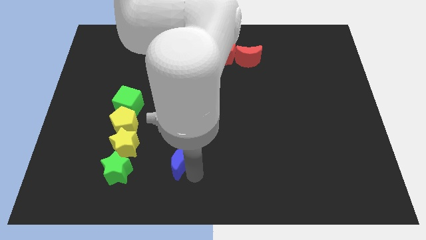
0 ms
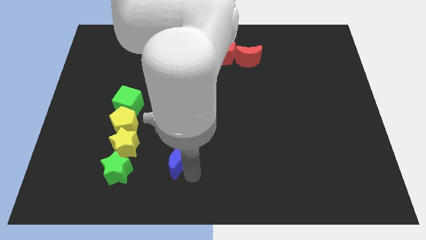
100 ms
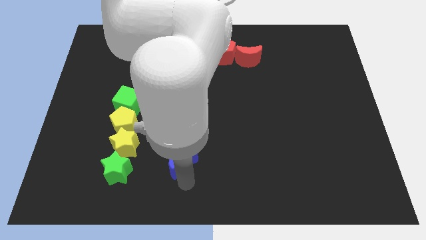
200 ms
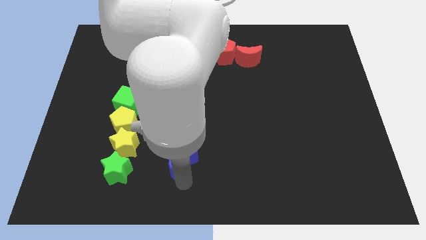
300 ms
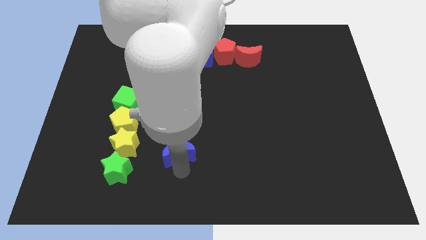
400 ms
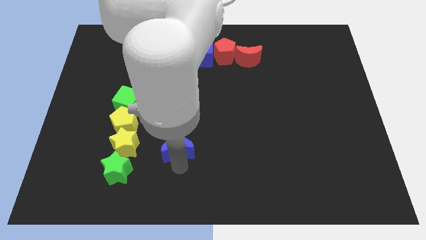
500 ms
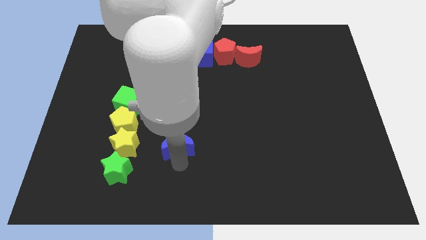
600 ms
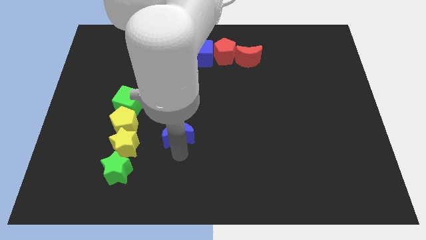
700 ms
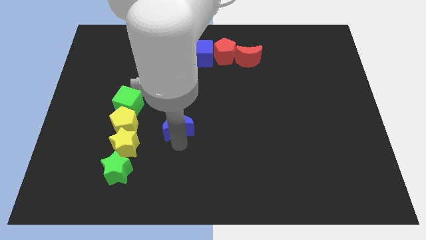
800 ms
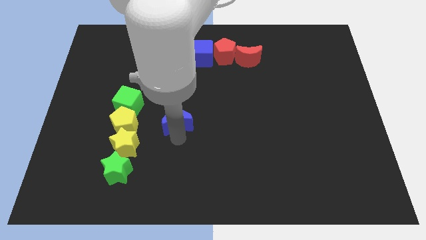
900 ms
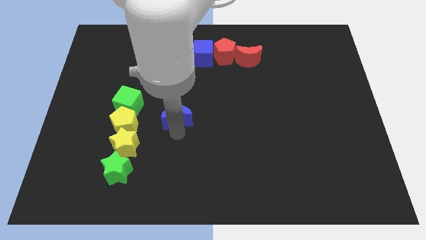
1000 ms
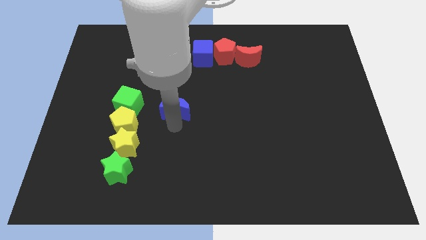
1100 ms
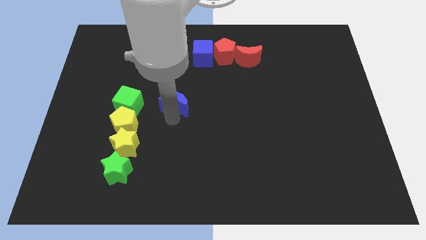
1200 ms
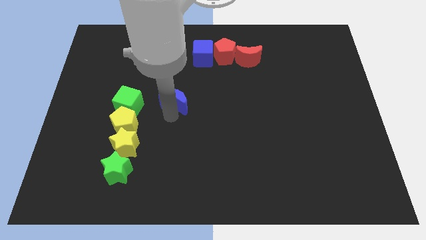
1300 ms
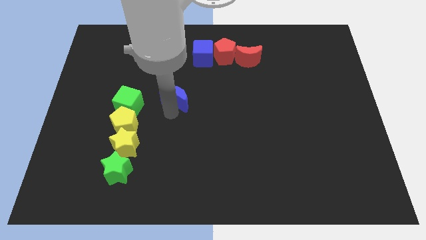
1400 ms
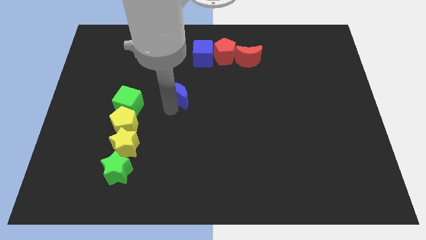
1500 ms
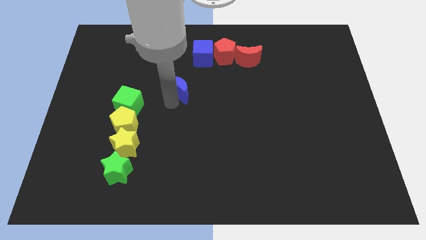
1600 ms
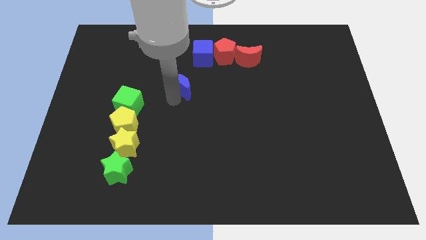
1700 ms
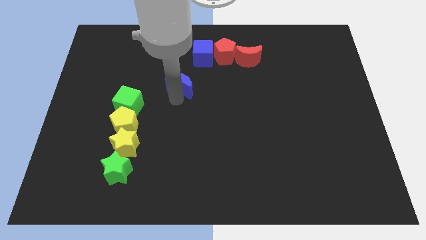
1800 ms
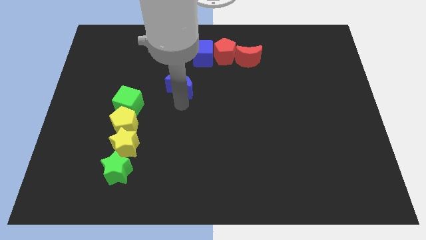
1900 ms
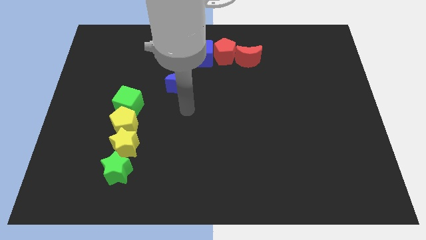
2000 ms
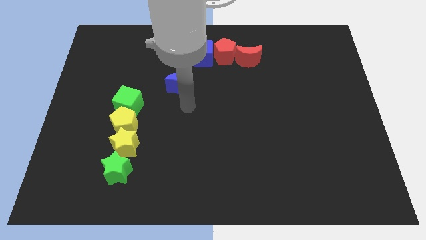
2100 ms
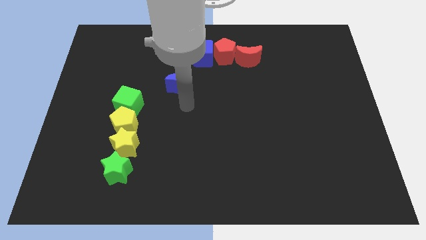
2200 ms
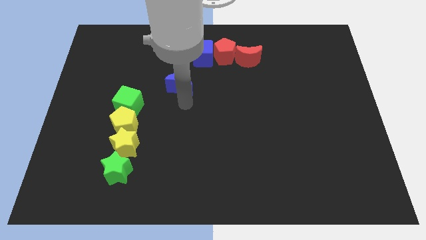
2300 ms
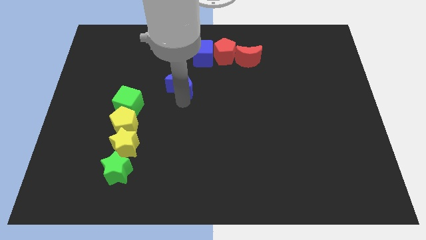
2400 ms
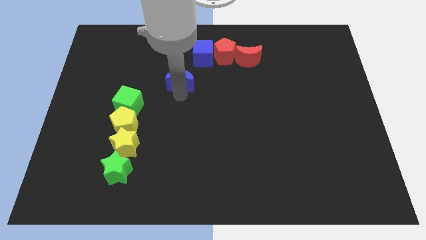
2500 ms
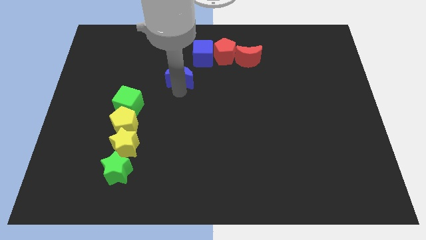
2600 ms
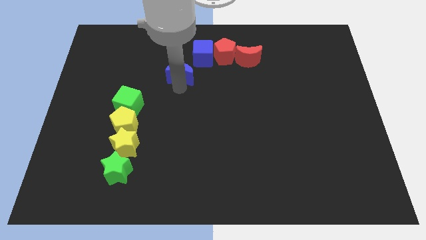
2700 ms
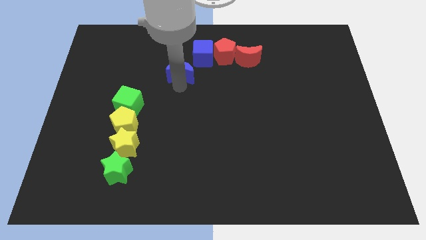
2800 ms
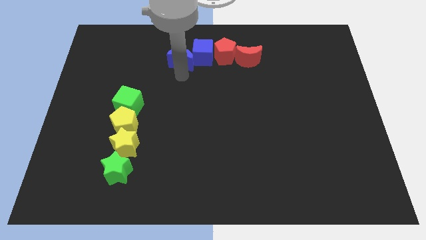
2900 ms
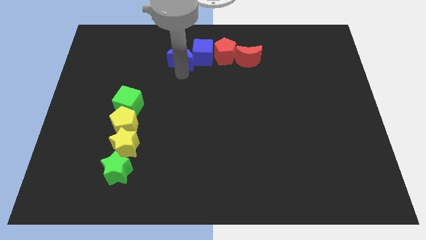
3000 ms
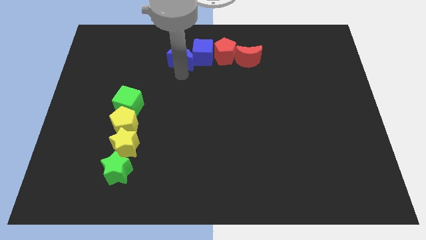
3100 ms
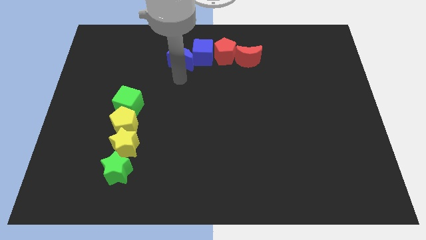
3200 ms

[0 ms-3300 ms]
move the blue moon to the left of the blue cube at the to

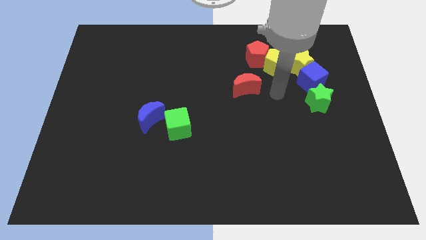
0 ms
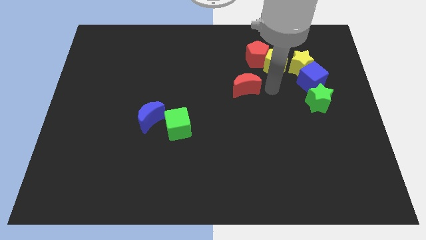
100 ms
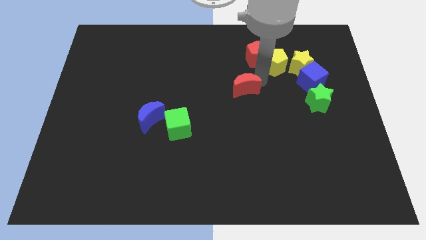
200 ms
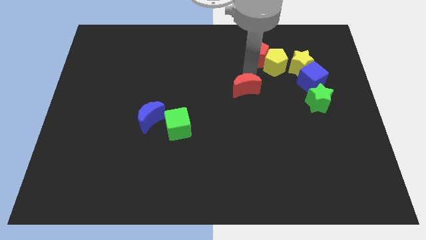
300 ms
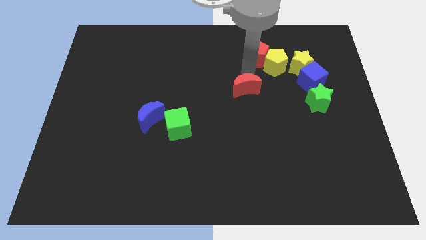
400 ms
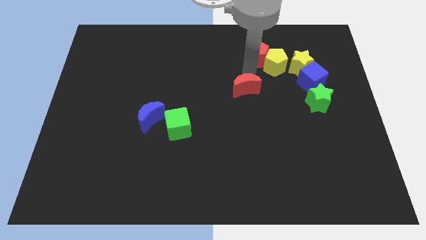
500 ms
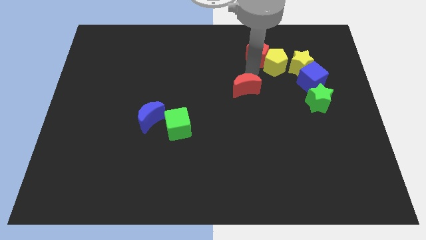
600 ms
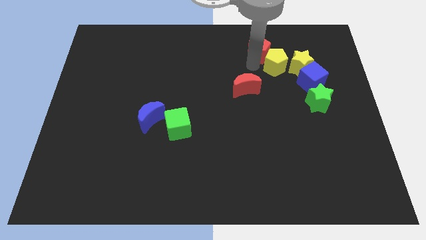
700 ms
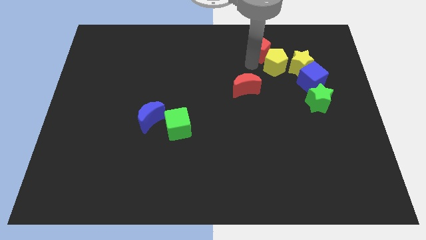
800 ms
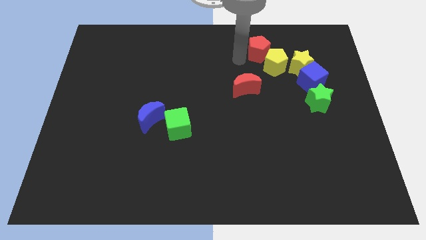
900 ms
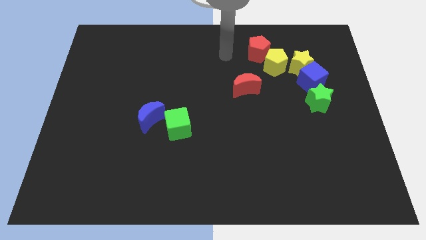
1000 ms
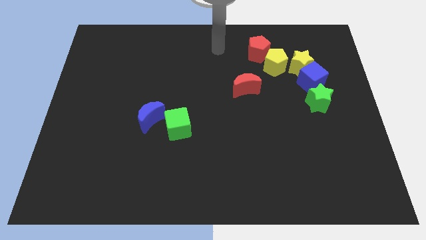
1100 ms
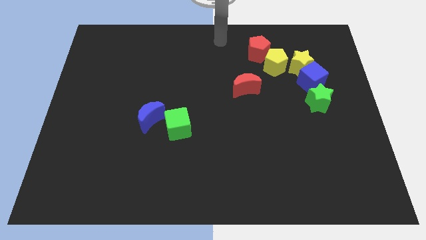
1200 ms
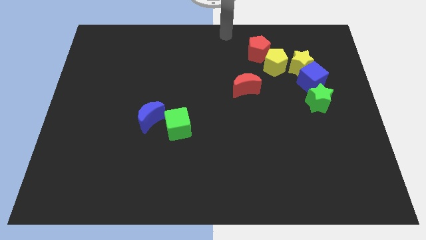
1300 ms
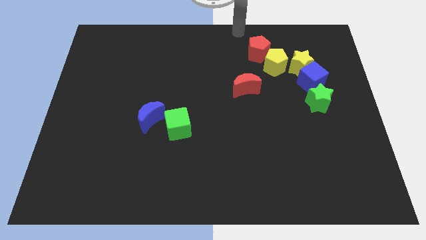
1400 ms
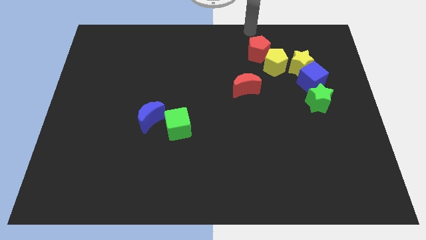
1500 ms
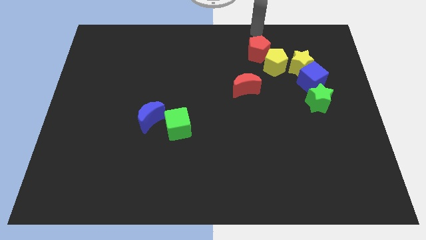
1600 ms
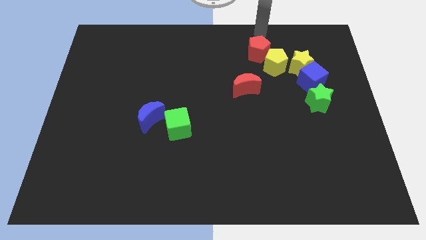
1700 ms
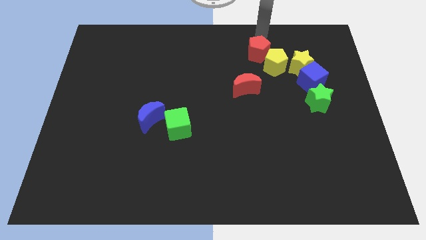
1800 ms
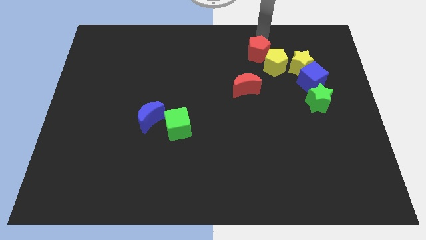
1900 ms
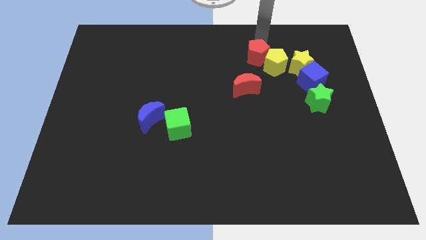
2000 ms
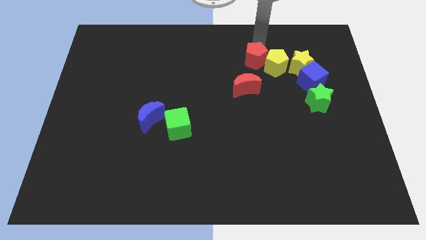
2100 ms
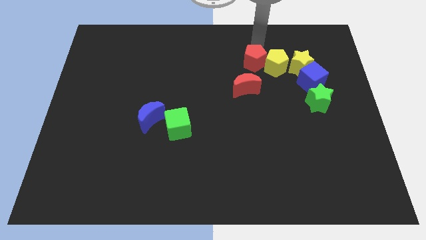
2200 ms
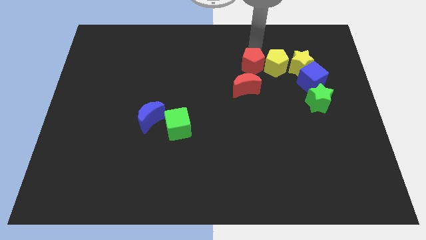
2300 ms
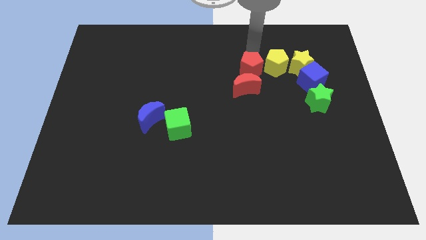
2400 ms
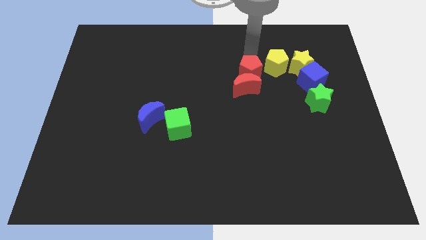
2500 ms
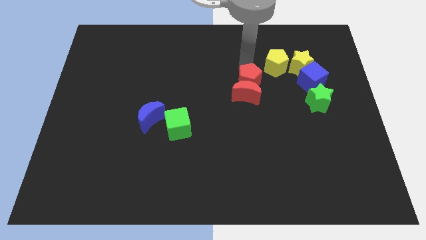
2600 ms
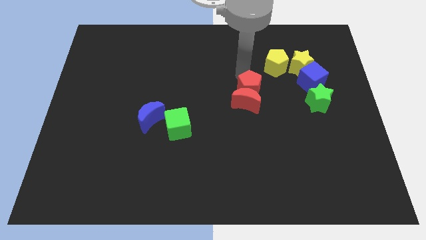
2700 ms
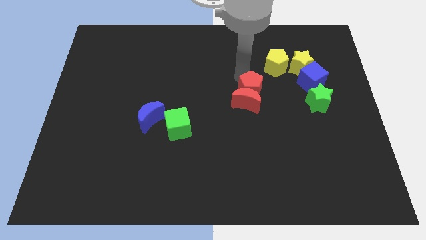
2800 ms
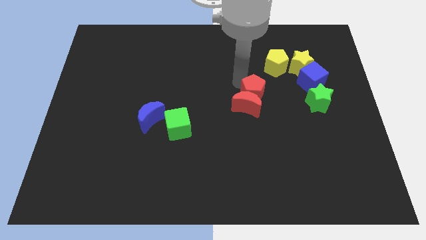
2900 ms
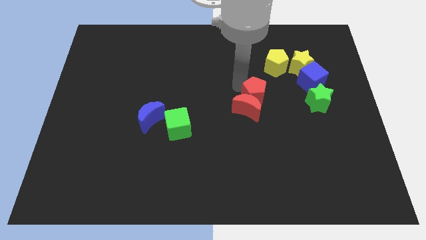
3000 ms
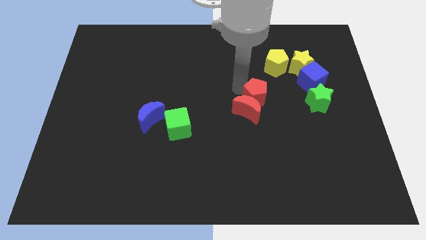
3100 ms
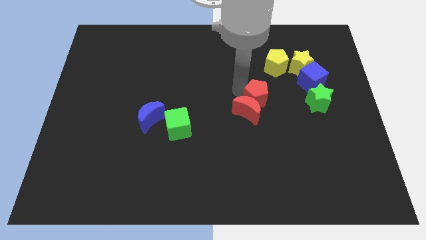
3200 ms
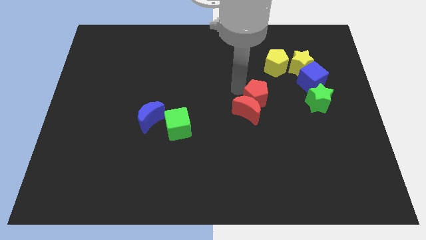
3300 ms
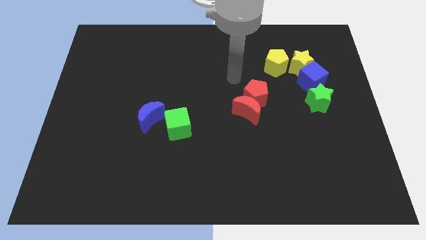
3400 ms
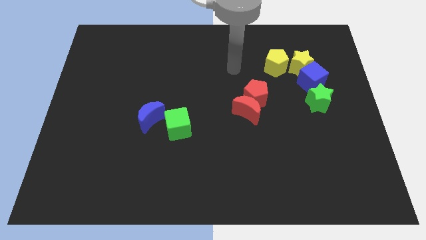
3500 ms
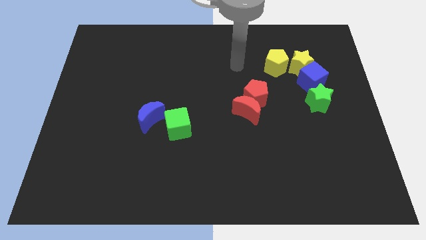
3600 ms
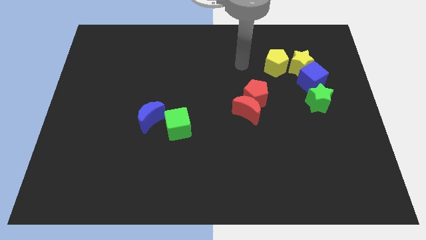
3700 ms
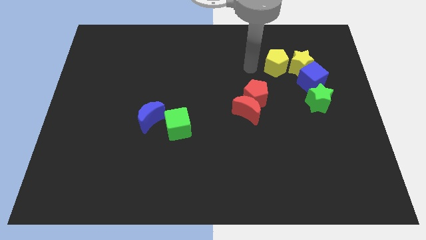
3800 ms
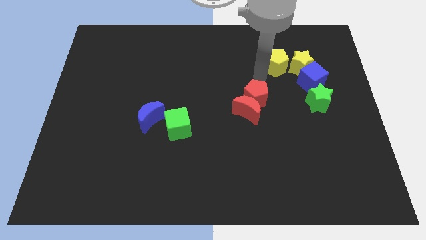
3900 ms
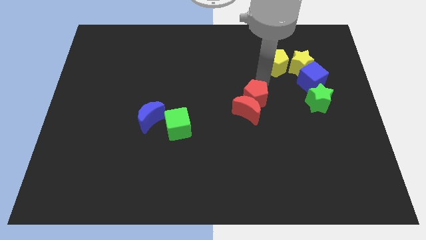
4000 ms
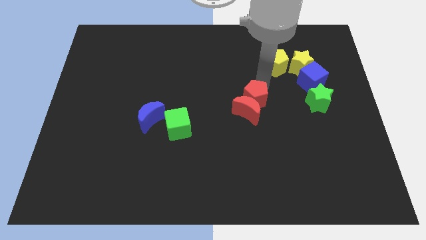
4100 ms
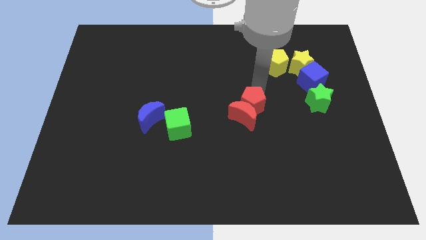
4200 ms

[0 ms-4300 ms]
move the red blocks towards center

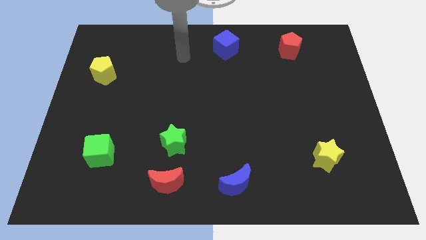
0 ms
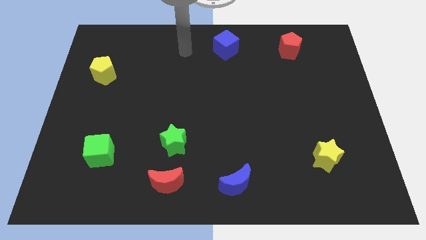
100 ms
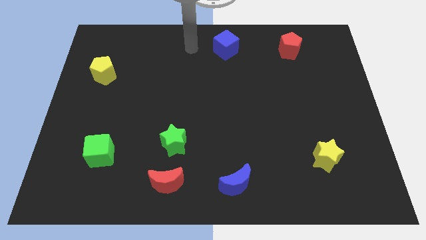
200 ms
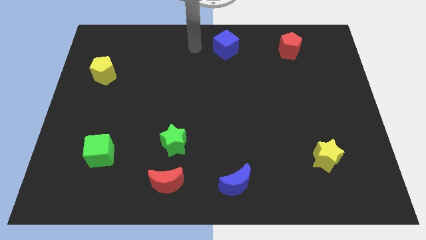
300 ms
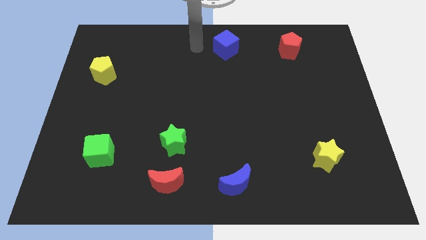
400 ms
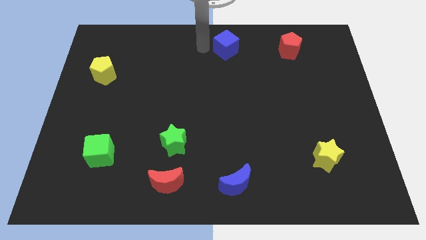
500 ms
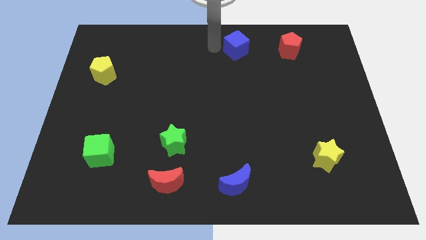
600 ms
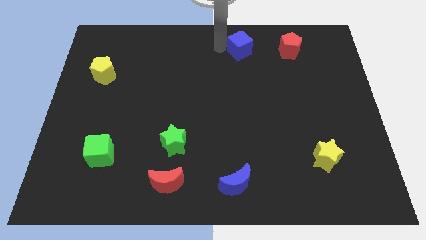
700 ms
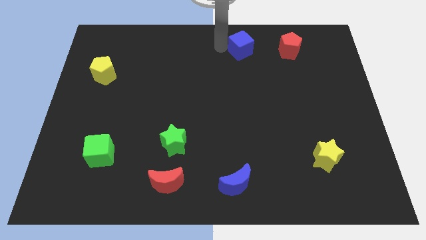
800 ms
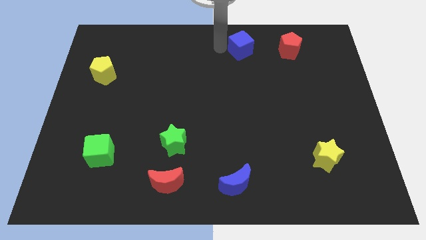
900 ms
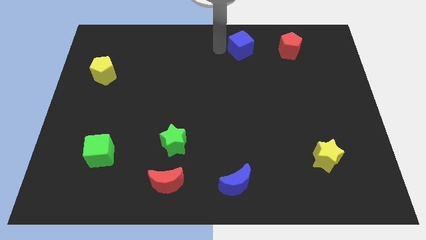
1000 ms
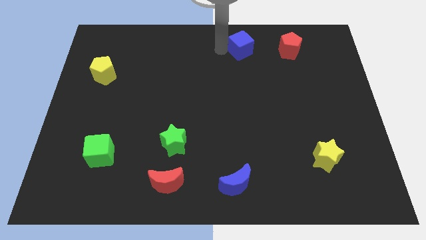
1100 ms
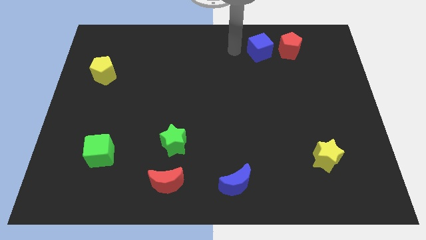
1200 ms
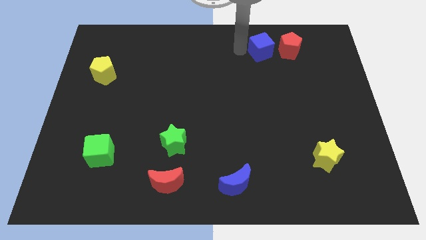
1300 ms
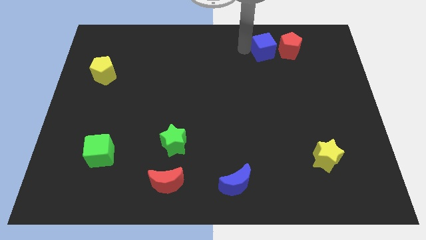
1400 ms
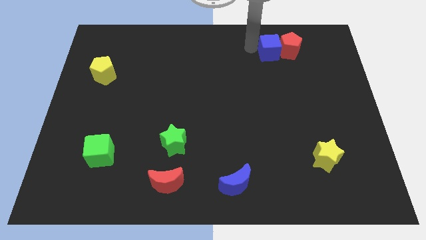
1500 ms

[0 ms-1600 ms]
move the blue cube into the red pentagon
